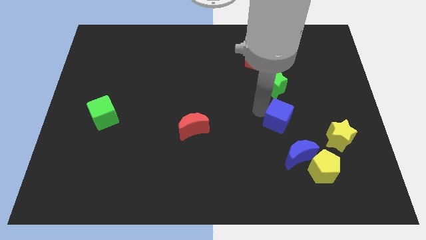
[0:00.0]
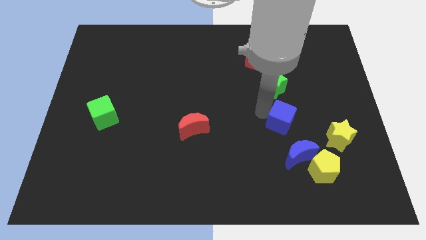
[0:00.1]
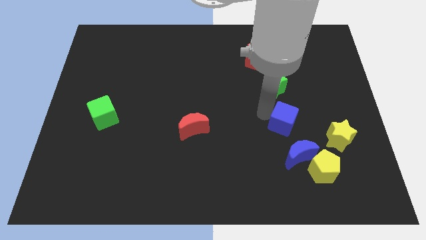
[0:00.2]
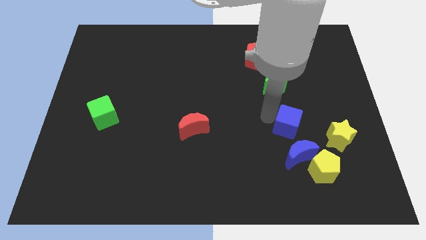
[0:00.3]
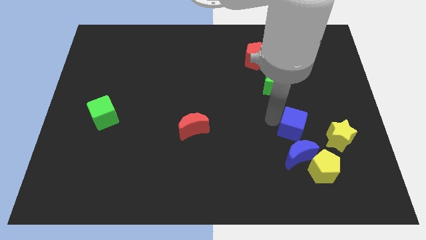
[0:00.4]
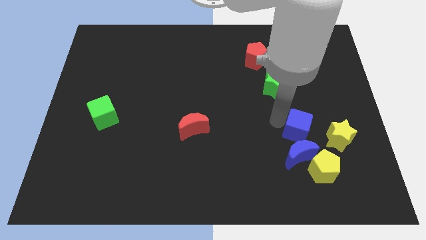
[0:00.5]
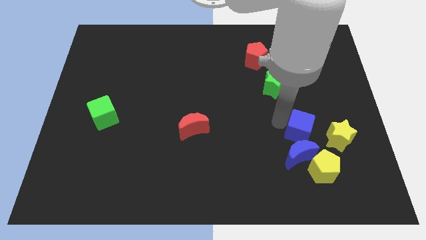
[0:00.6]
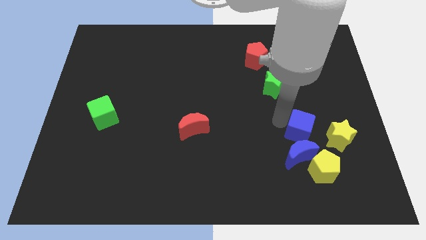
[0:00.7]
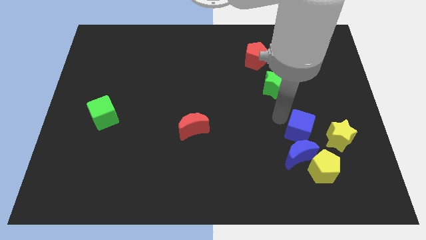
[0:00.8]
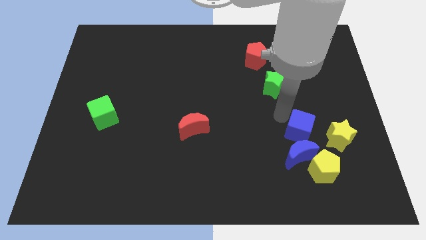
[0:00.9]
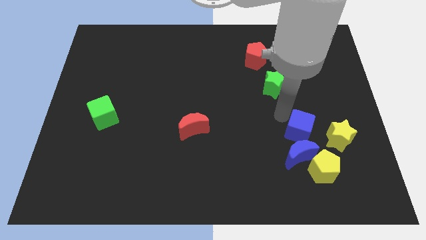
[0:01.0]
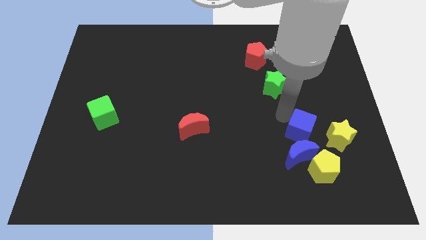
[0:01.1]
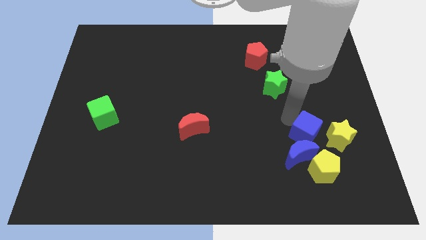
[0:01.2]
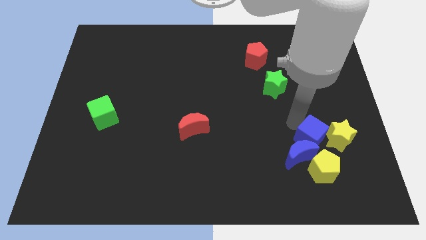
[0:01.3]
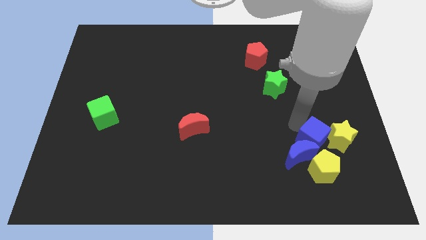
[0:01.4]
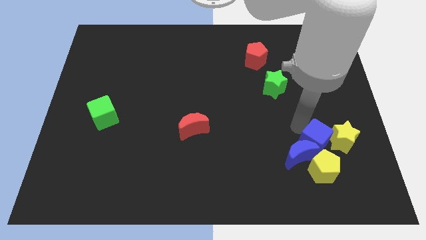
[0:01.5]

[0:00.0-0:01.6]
push the blue cube into the group of blocks

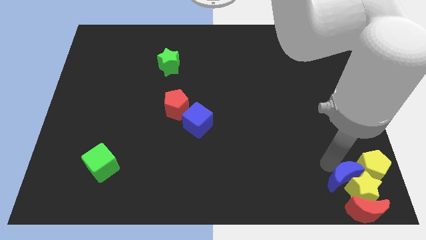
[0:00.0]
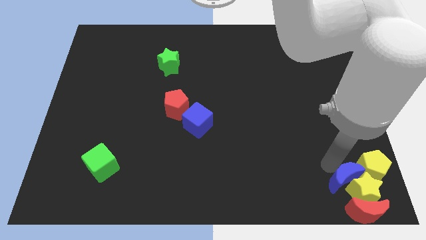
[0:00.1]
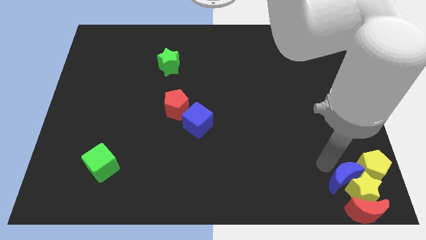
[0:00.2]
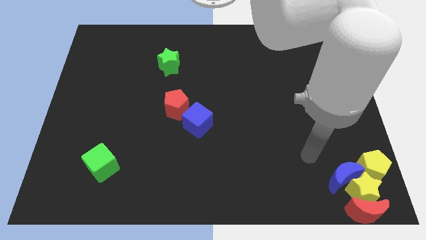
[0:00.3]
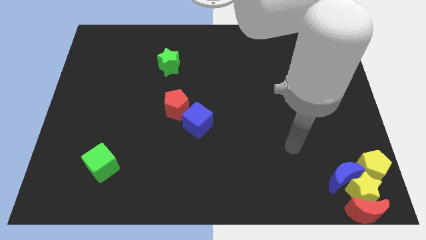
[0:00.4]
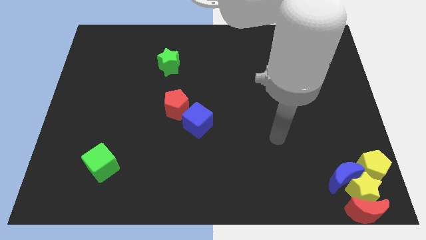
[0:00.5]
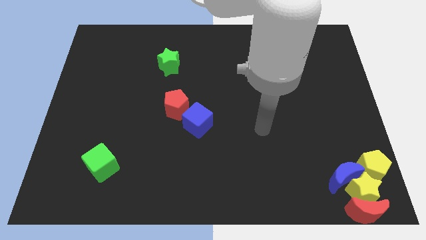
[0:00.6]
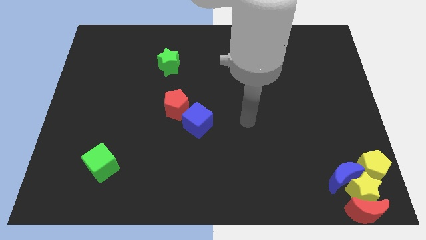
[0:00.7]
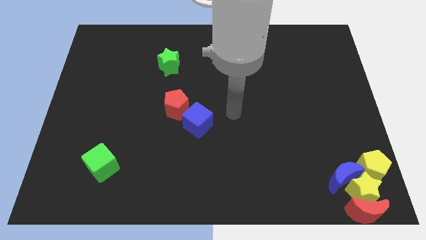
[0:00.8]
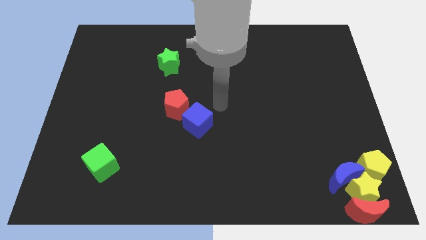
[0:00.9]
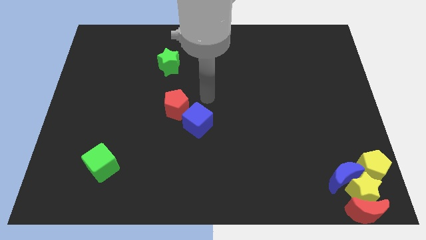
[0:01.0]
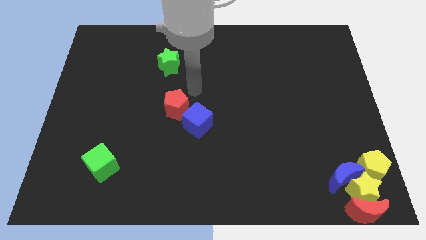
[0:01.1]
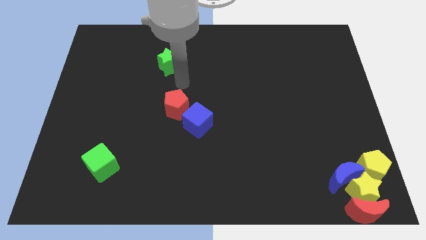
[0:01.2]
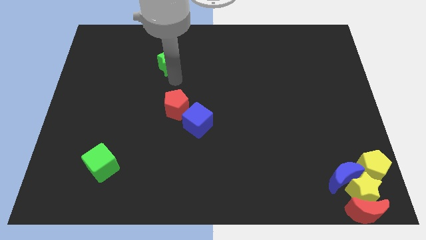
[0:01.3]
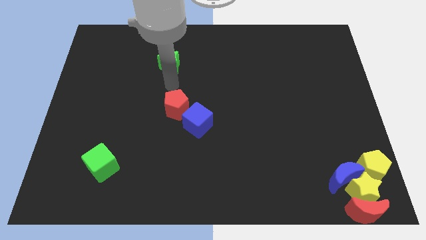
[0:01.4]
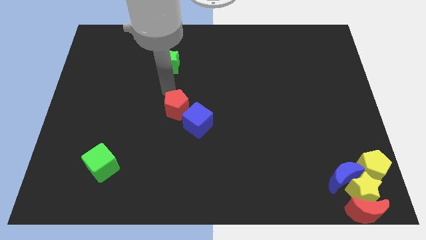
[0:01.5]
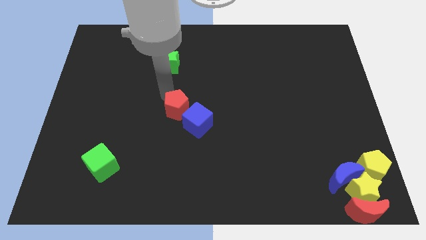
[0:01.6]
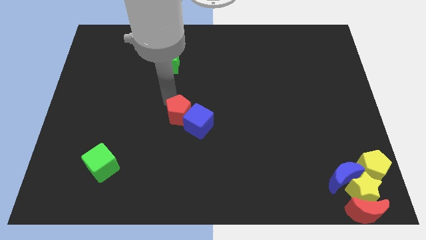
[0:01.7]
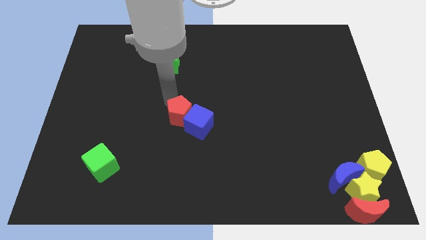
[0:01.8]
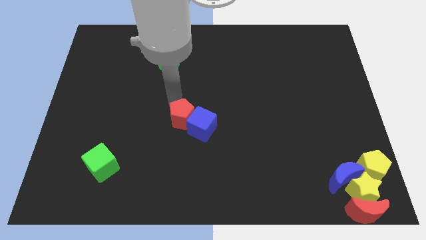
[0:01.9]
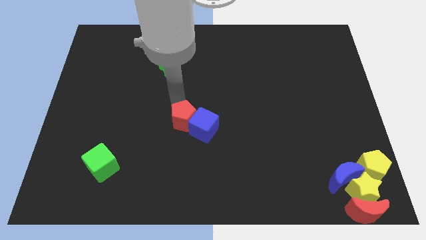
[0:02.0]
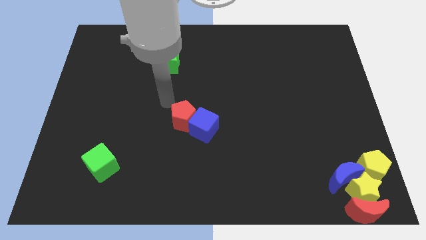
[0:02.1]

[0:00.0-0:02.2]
move your arm away from the group of blocks

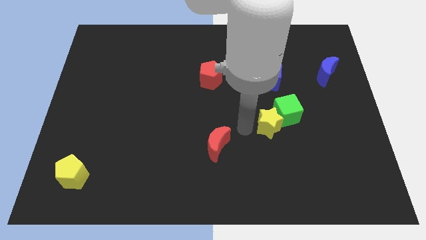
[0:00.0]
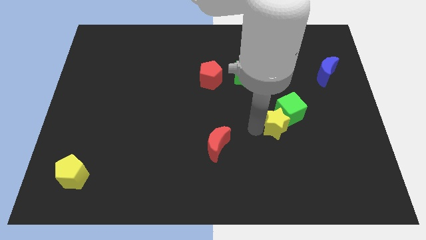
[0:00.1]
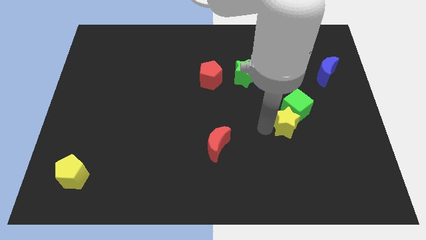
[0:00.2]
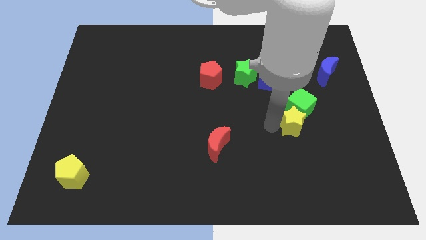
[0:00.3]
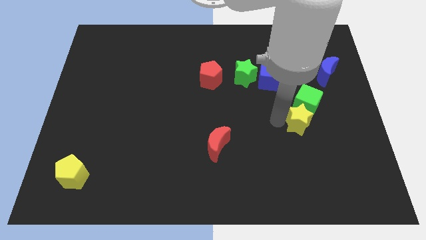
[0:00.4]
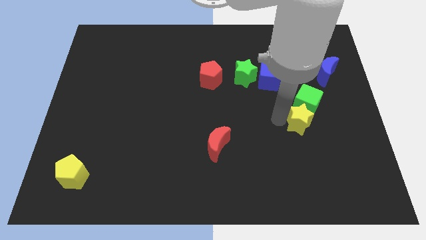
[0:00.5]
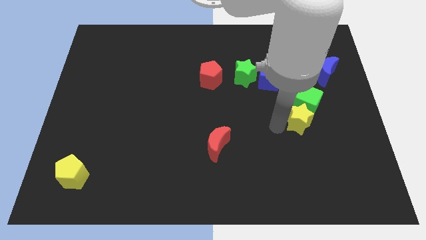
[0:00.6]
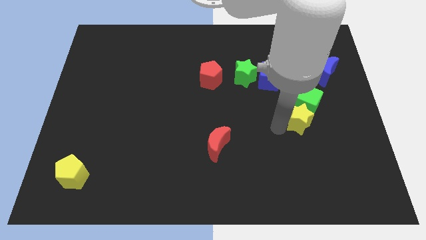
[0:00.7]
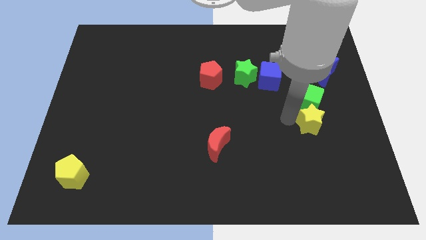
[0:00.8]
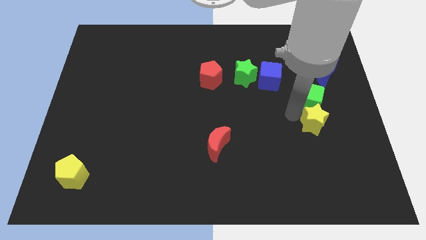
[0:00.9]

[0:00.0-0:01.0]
move the yellow star along with the green cube to the right

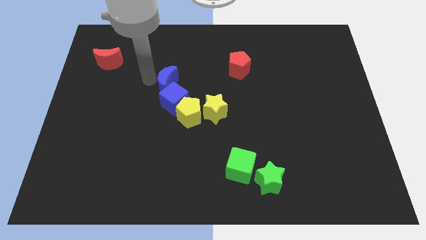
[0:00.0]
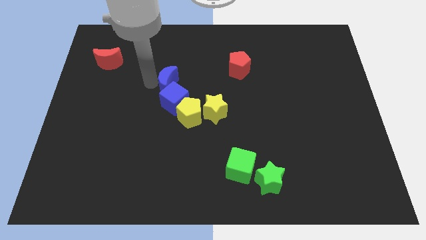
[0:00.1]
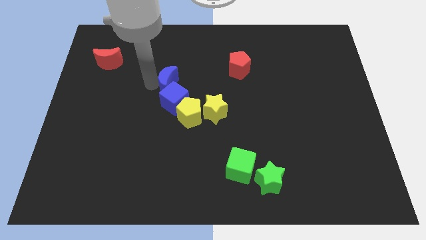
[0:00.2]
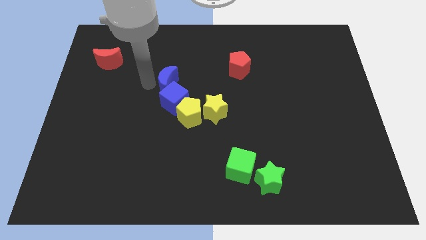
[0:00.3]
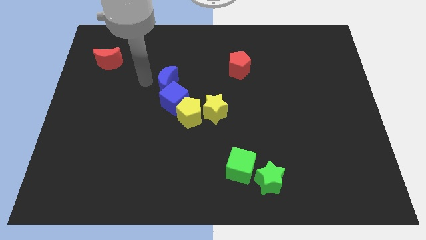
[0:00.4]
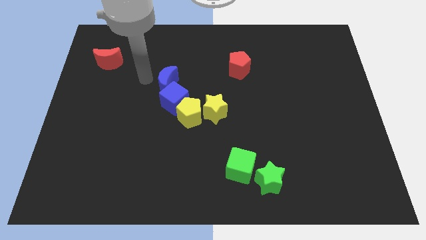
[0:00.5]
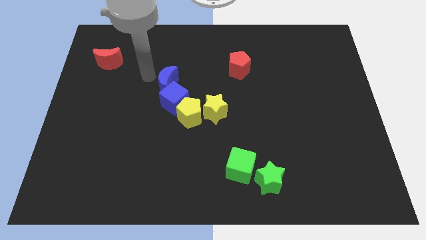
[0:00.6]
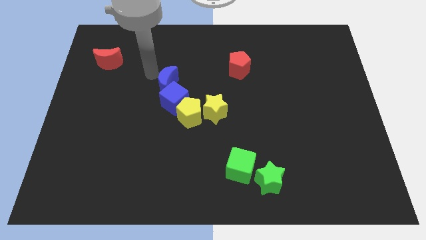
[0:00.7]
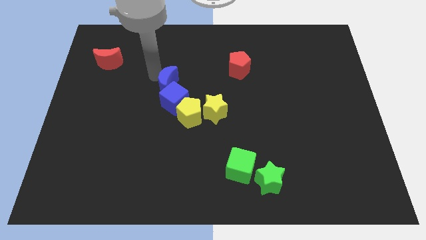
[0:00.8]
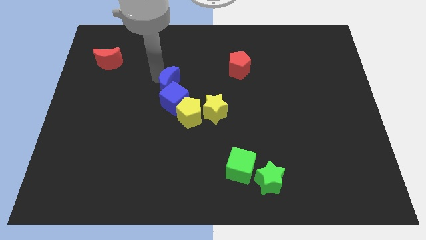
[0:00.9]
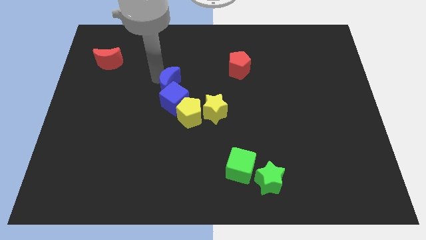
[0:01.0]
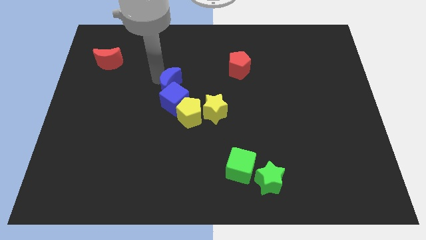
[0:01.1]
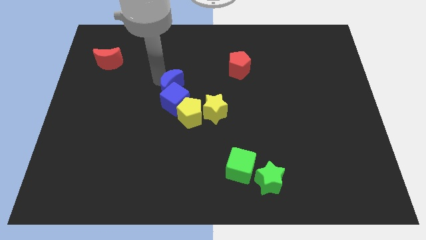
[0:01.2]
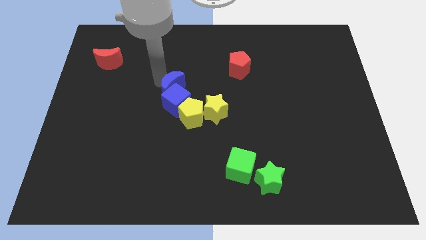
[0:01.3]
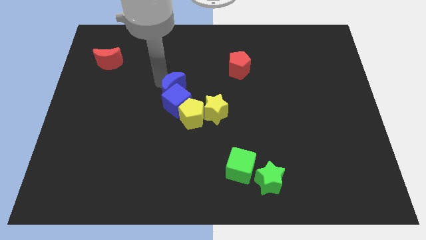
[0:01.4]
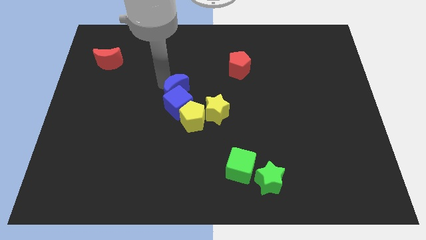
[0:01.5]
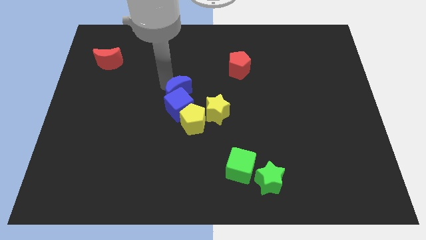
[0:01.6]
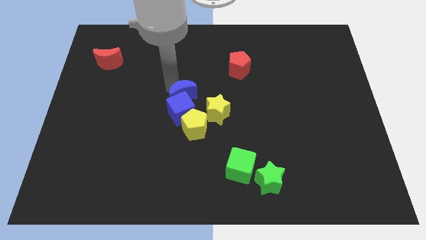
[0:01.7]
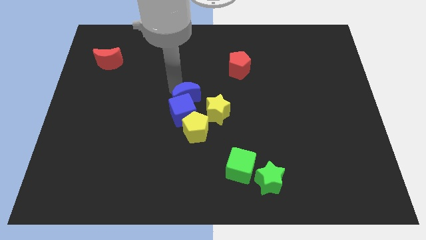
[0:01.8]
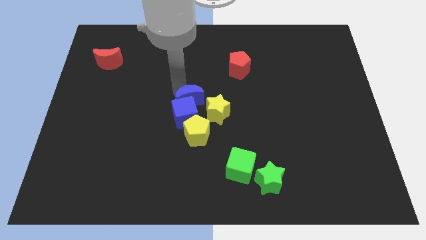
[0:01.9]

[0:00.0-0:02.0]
make a group of blue and yellow blocks at the center

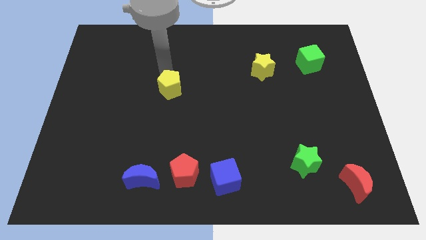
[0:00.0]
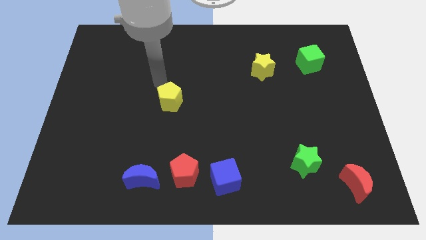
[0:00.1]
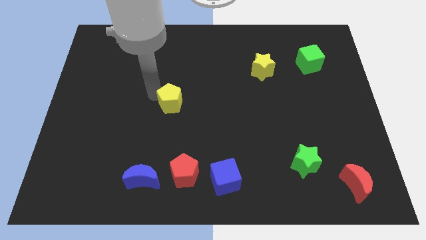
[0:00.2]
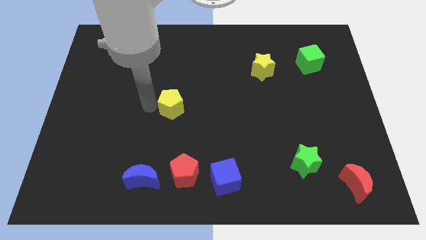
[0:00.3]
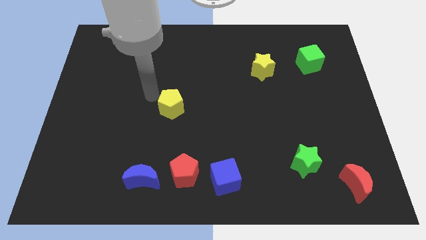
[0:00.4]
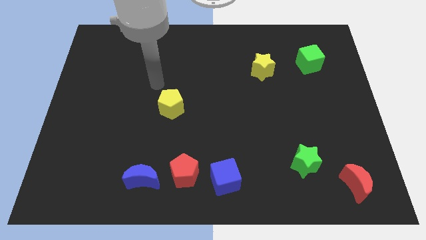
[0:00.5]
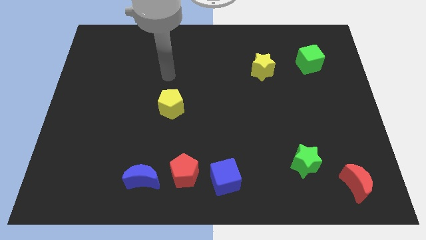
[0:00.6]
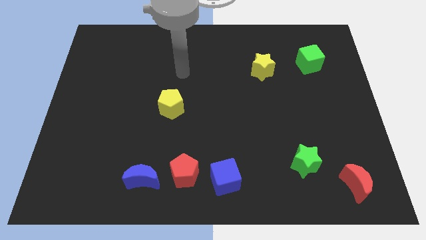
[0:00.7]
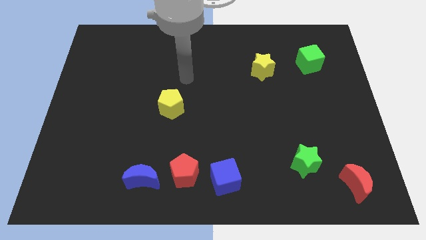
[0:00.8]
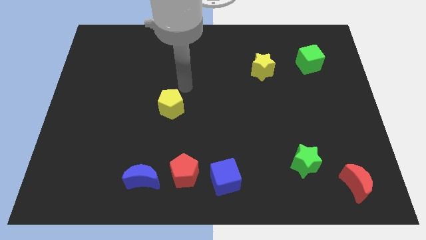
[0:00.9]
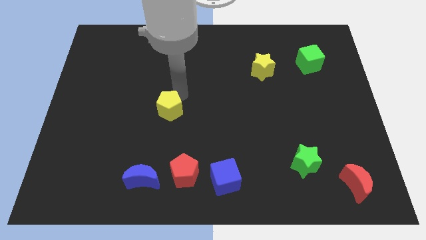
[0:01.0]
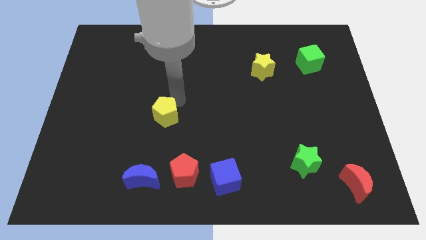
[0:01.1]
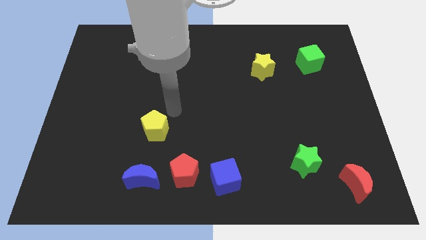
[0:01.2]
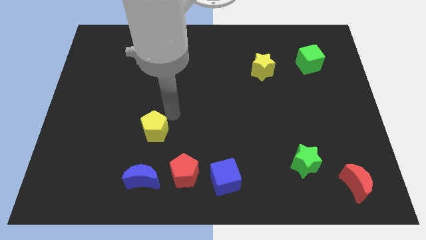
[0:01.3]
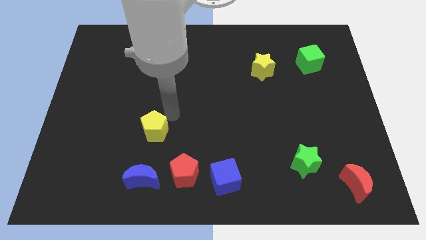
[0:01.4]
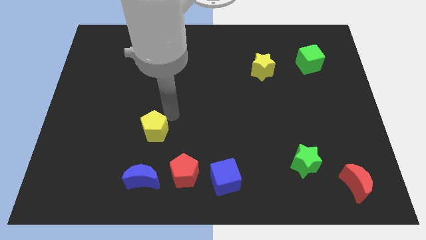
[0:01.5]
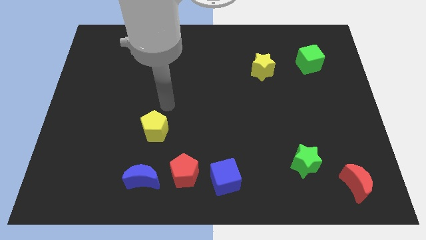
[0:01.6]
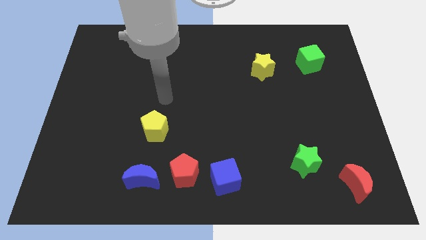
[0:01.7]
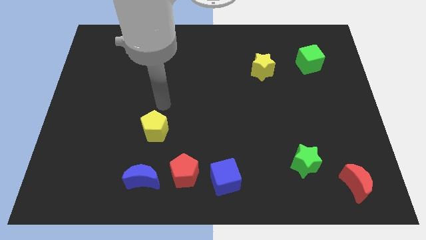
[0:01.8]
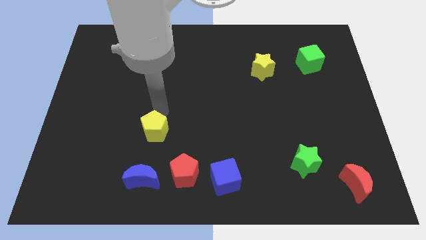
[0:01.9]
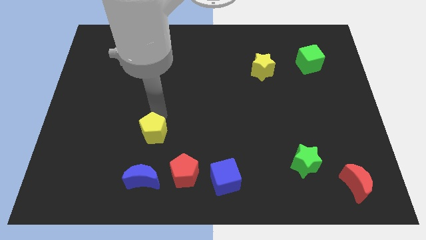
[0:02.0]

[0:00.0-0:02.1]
move the yellow pentagon to the top side of the blue moon
